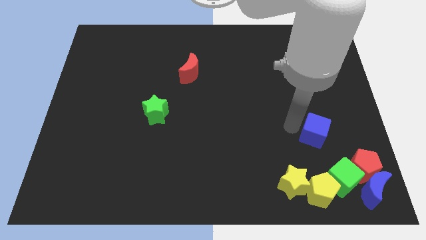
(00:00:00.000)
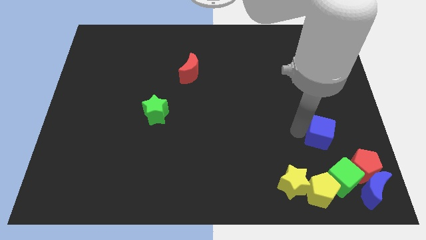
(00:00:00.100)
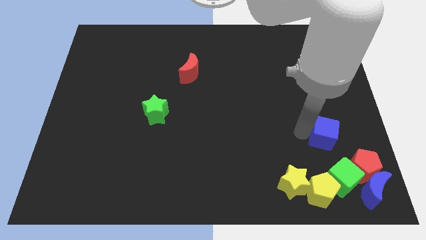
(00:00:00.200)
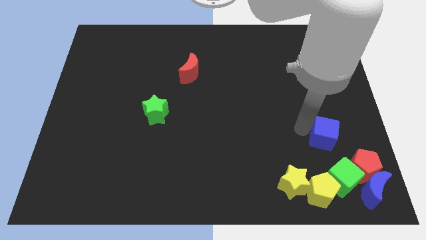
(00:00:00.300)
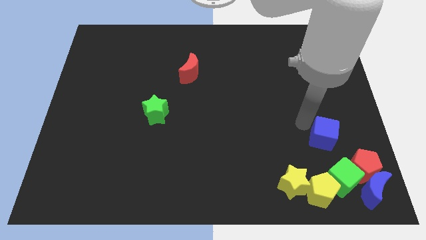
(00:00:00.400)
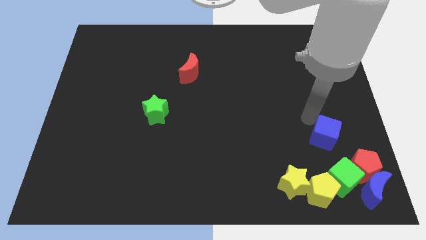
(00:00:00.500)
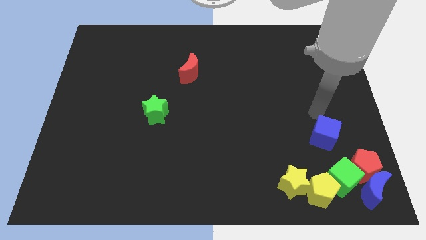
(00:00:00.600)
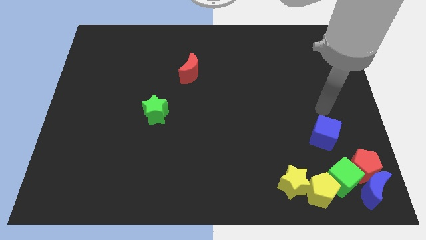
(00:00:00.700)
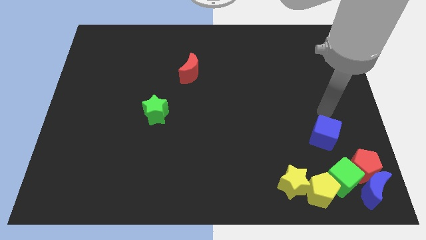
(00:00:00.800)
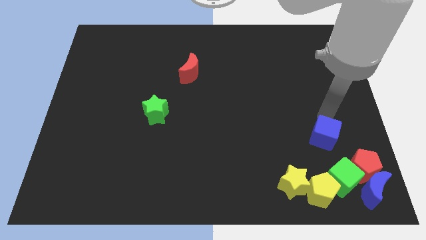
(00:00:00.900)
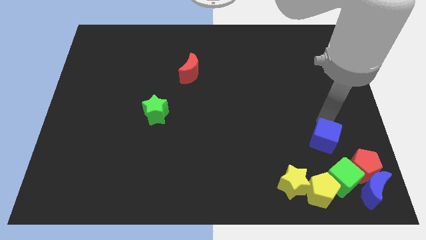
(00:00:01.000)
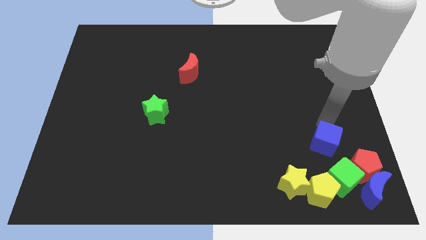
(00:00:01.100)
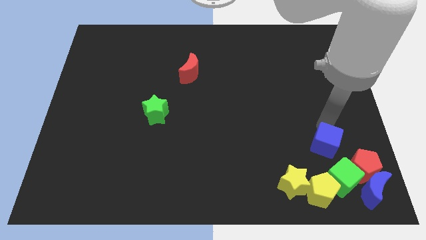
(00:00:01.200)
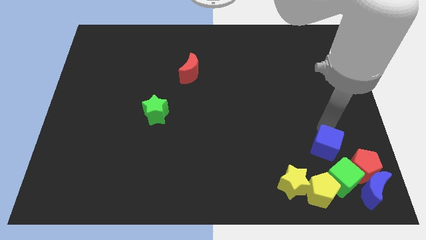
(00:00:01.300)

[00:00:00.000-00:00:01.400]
move blue cube to the top of green cube

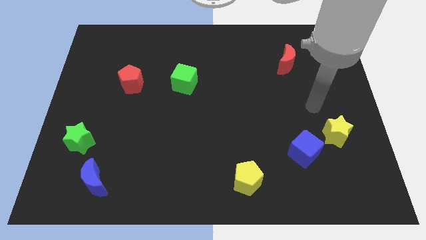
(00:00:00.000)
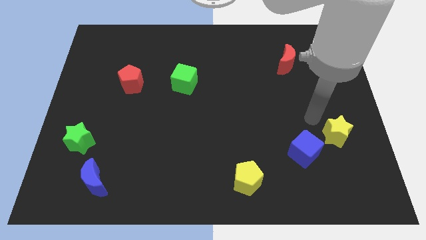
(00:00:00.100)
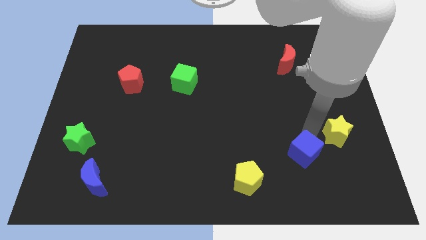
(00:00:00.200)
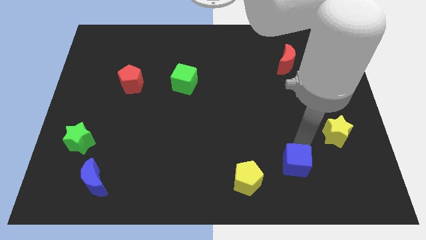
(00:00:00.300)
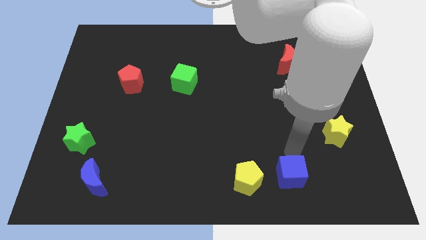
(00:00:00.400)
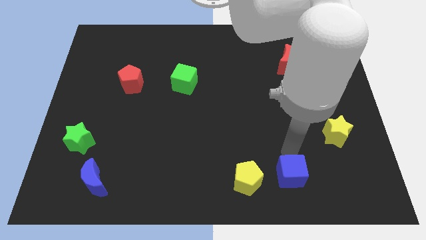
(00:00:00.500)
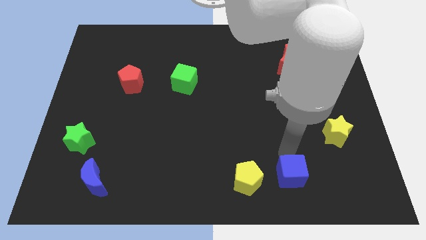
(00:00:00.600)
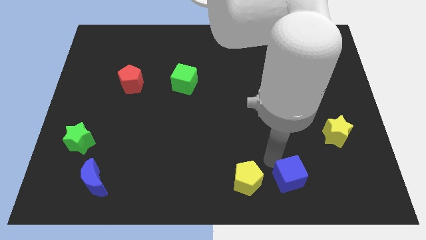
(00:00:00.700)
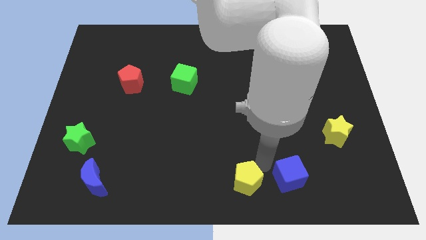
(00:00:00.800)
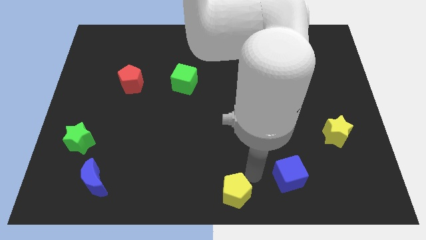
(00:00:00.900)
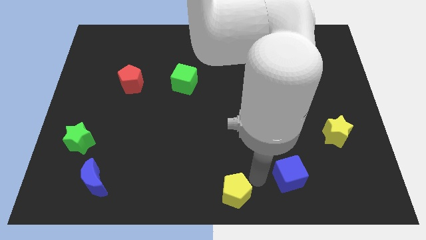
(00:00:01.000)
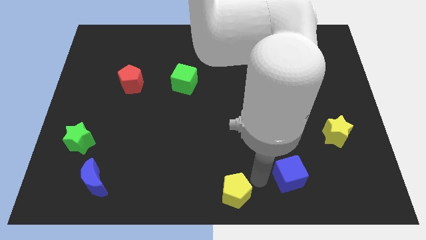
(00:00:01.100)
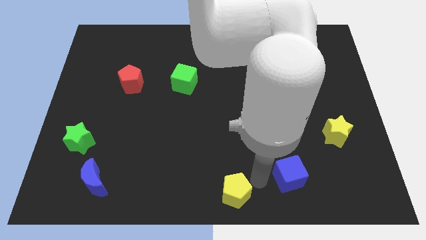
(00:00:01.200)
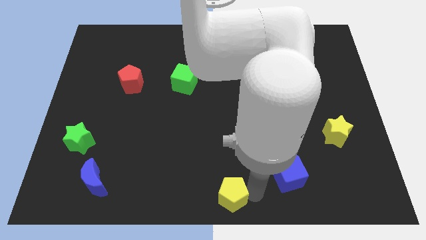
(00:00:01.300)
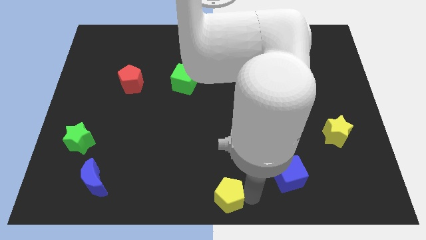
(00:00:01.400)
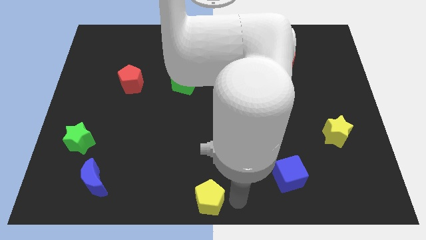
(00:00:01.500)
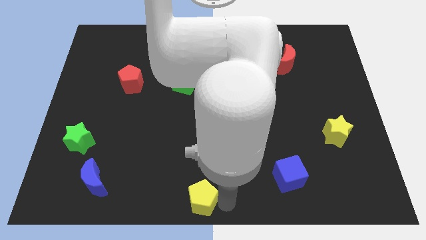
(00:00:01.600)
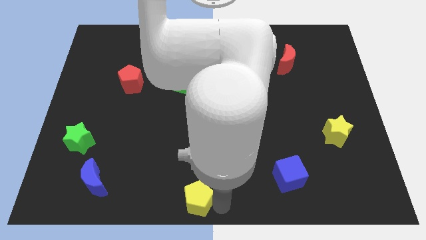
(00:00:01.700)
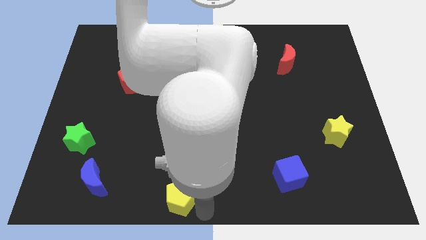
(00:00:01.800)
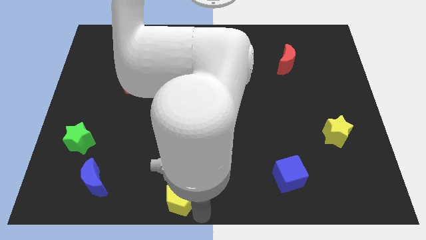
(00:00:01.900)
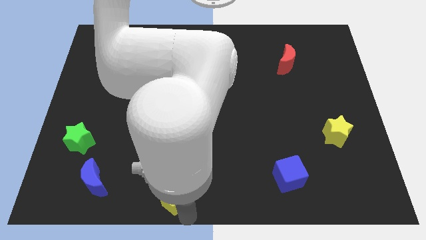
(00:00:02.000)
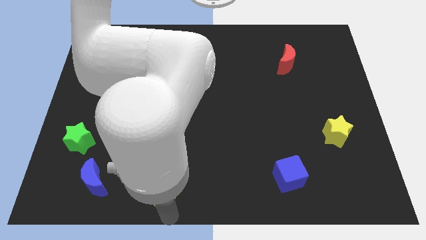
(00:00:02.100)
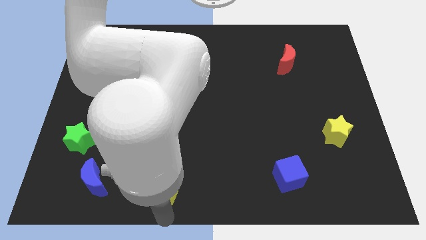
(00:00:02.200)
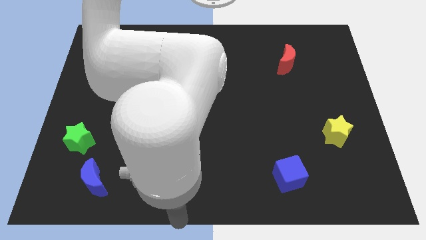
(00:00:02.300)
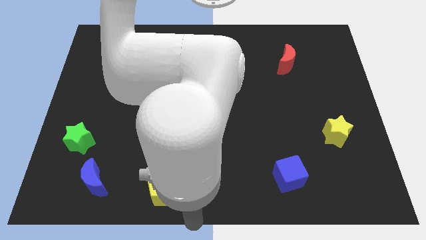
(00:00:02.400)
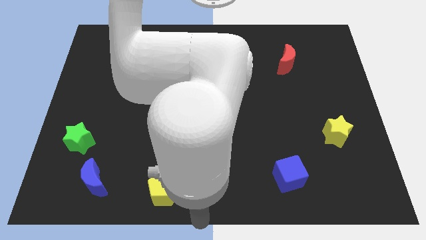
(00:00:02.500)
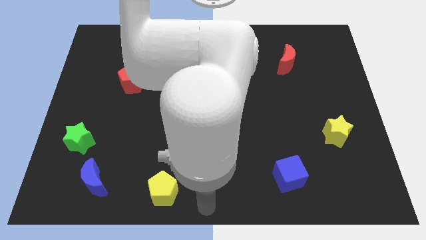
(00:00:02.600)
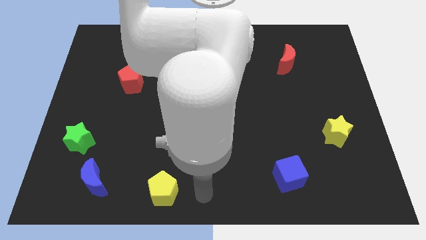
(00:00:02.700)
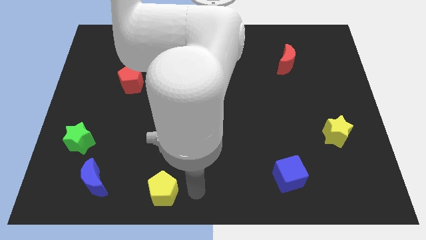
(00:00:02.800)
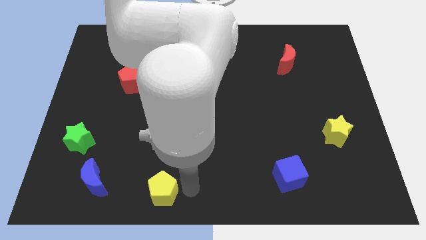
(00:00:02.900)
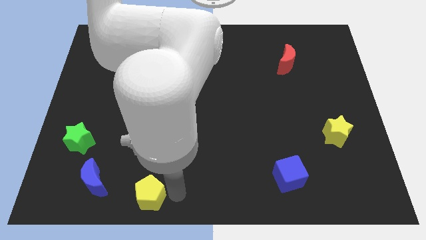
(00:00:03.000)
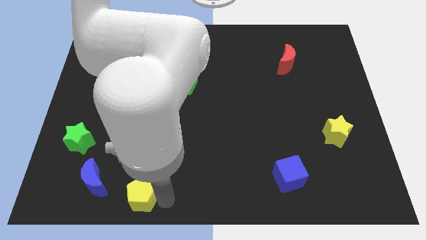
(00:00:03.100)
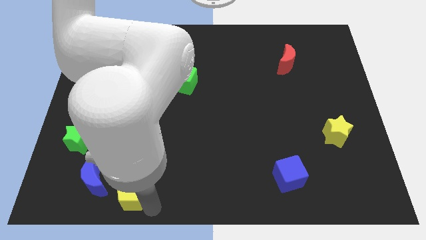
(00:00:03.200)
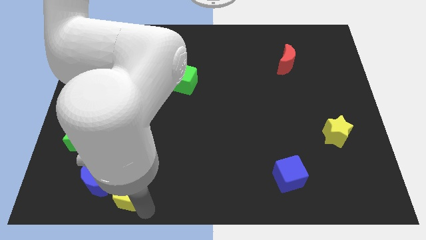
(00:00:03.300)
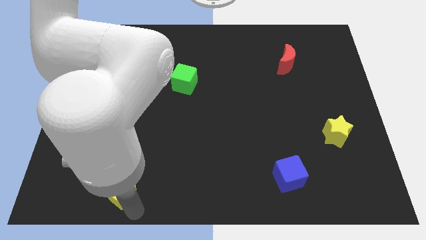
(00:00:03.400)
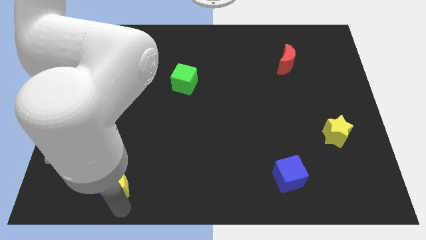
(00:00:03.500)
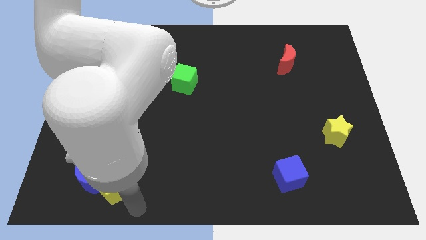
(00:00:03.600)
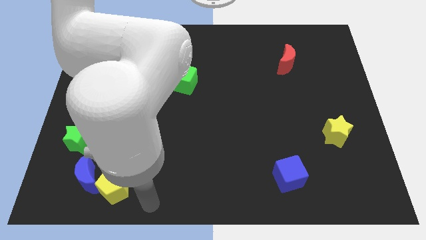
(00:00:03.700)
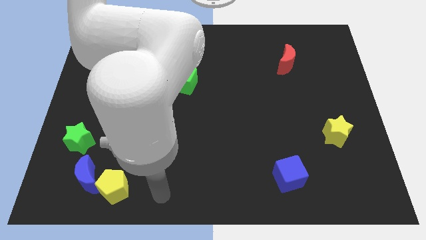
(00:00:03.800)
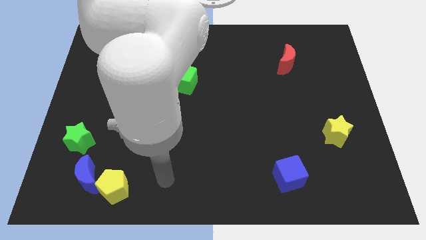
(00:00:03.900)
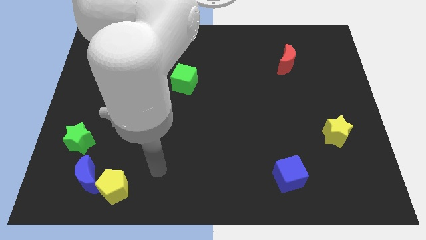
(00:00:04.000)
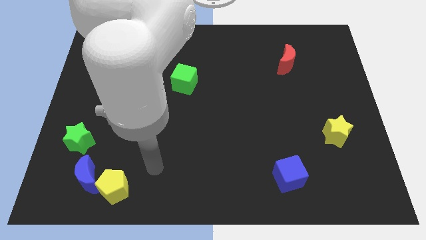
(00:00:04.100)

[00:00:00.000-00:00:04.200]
place the yellow pentagon towards the bottom right side of the blue crescent

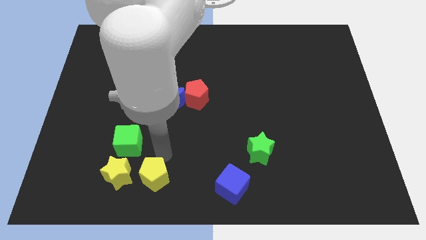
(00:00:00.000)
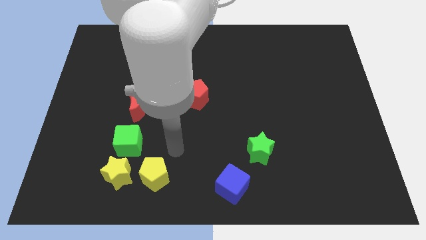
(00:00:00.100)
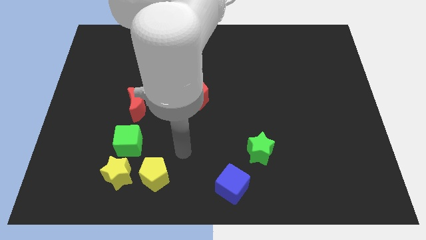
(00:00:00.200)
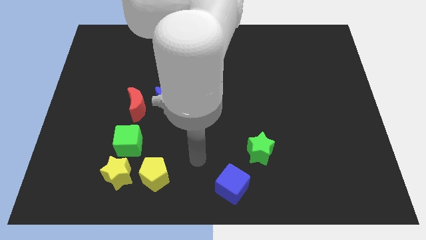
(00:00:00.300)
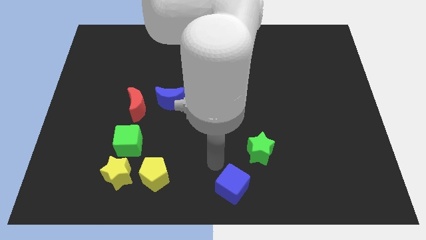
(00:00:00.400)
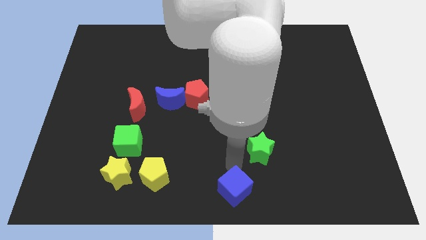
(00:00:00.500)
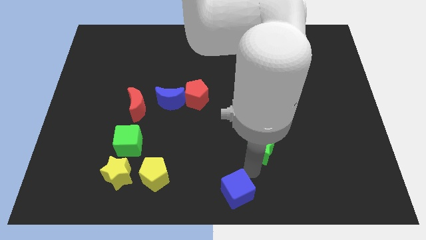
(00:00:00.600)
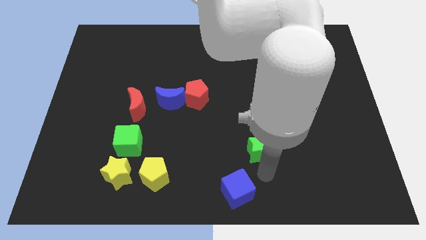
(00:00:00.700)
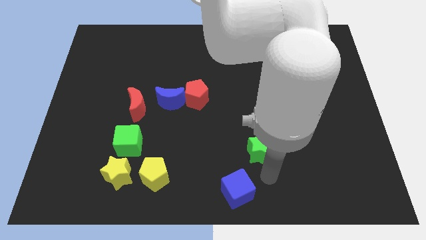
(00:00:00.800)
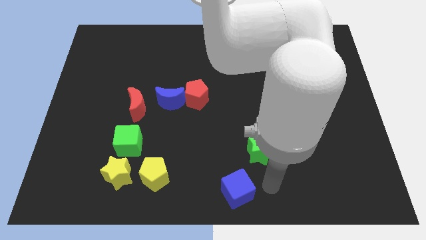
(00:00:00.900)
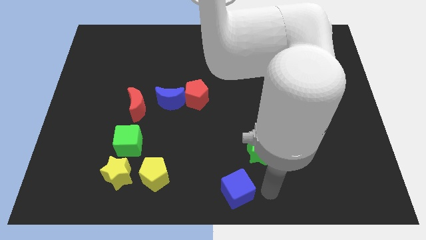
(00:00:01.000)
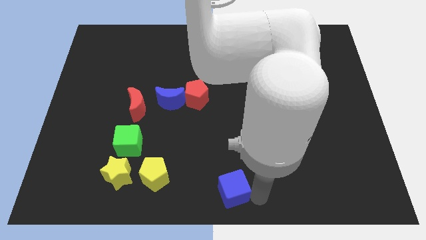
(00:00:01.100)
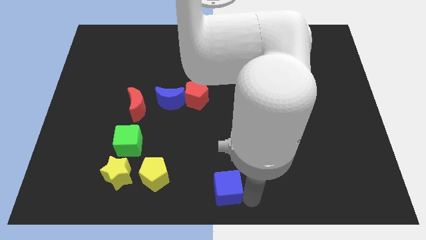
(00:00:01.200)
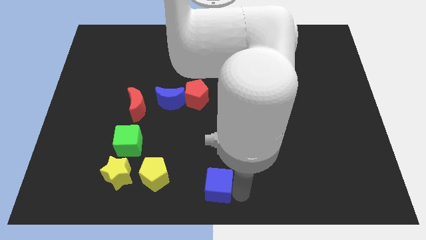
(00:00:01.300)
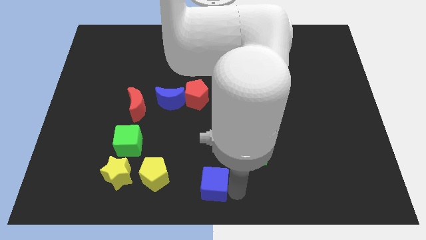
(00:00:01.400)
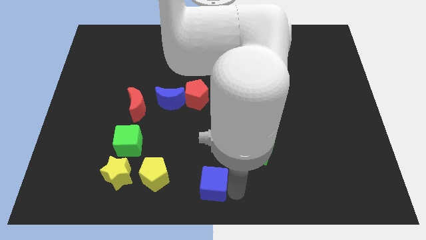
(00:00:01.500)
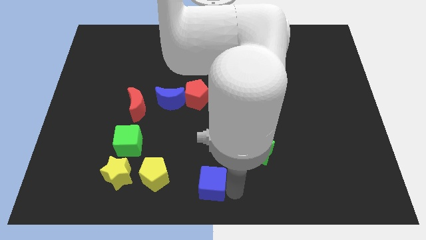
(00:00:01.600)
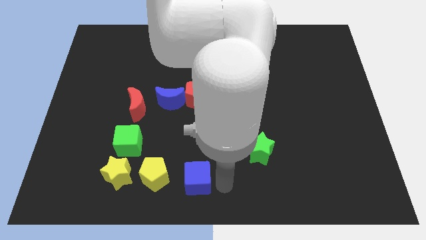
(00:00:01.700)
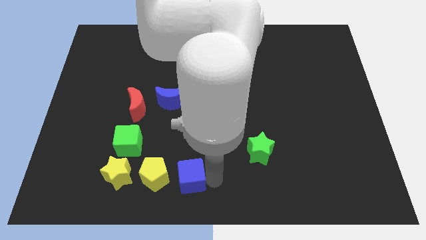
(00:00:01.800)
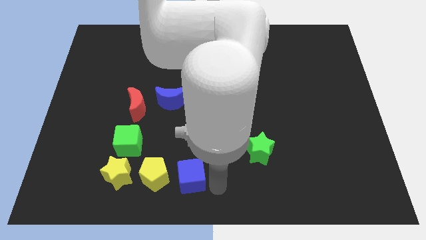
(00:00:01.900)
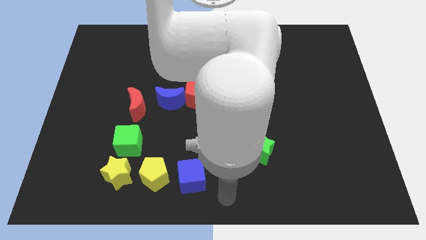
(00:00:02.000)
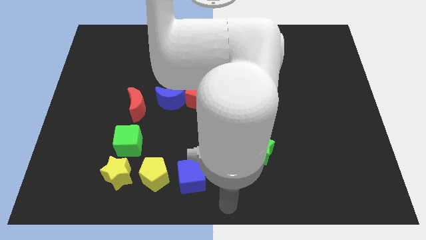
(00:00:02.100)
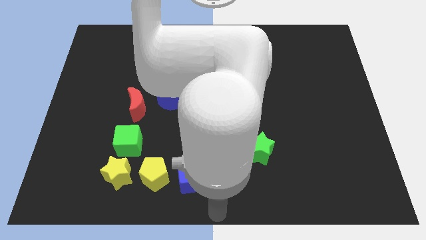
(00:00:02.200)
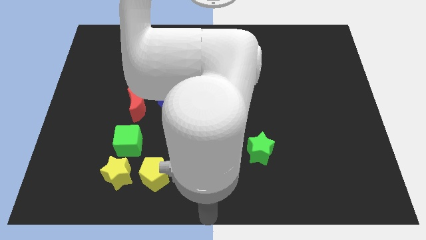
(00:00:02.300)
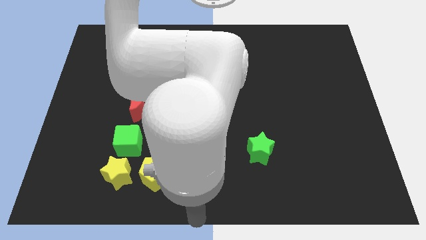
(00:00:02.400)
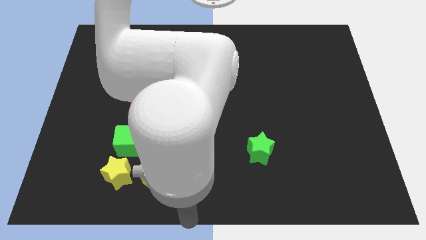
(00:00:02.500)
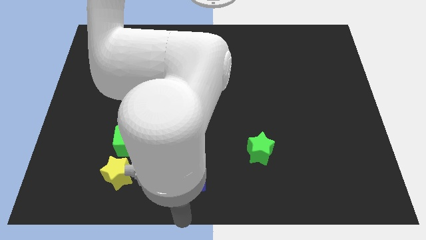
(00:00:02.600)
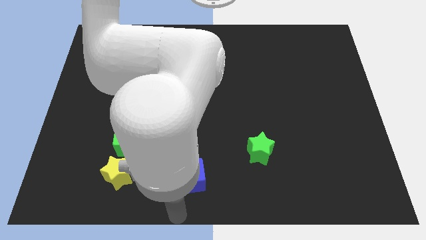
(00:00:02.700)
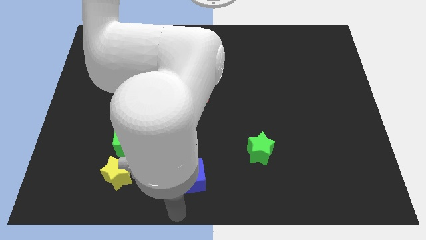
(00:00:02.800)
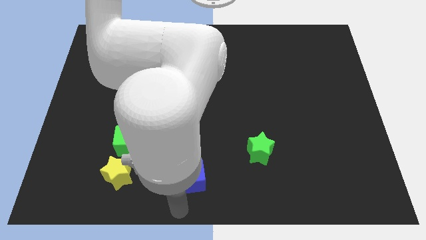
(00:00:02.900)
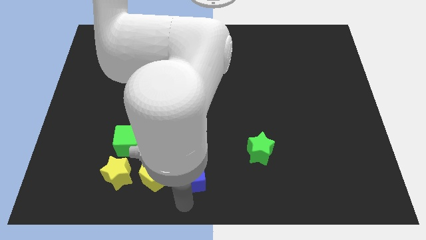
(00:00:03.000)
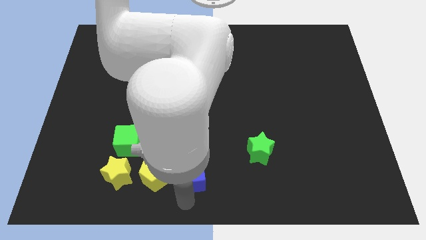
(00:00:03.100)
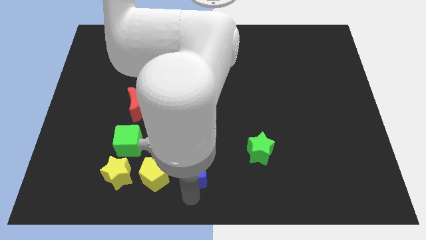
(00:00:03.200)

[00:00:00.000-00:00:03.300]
place the blue cube to the right side of the yellow pentagon
